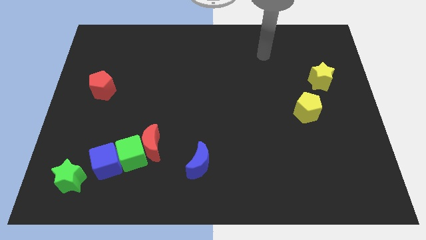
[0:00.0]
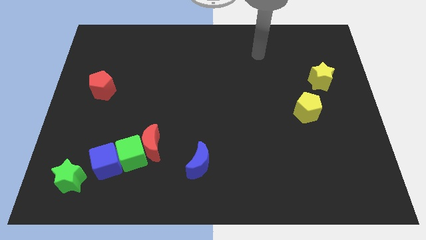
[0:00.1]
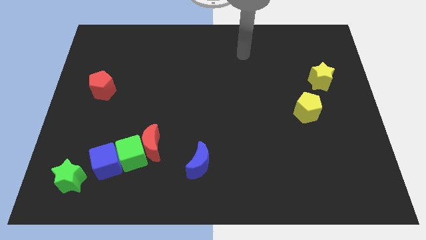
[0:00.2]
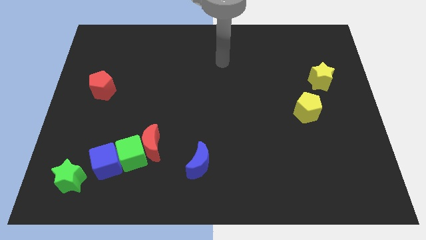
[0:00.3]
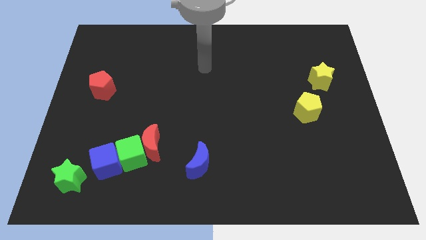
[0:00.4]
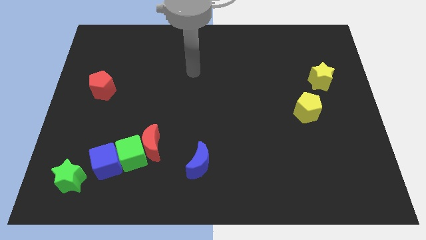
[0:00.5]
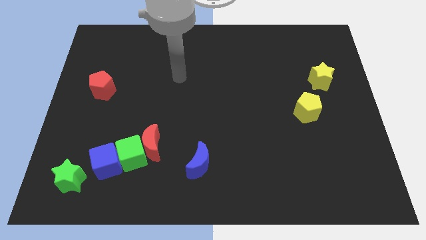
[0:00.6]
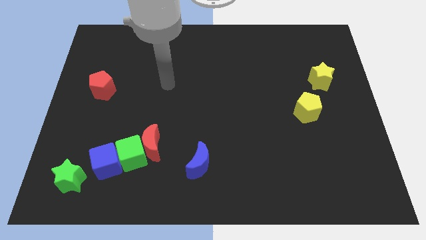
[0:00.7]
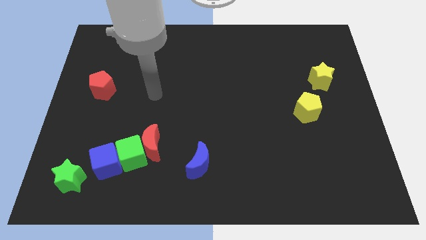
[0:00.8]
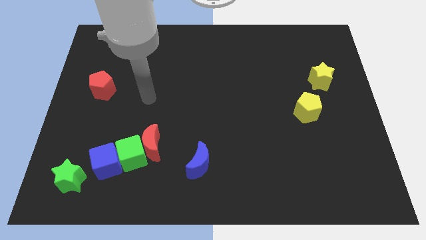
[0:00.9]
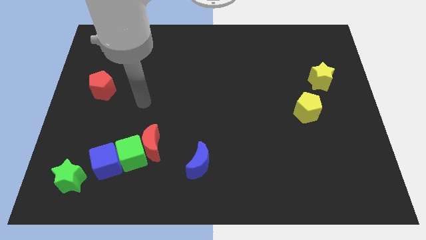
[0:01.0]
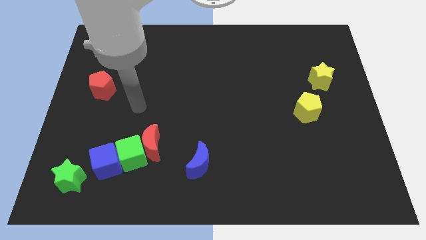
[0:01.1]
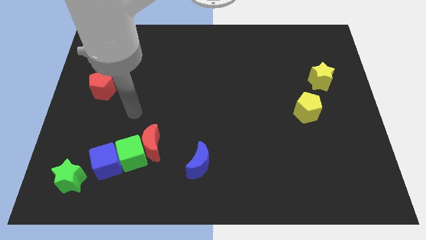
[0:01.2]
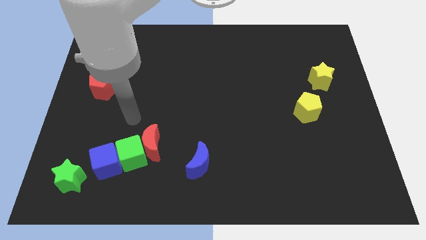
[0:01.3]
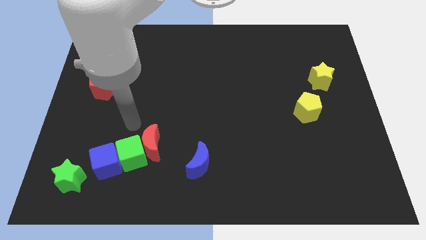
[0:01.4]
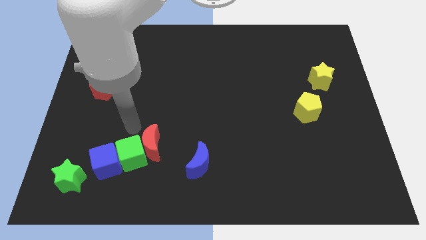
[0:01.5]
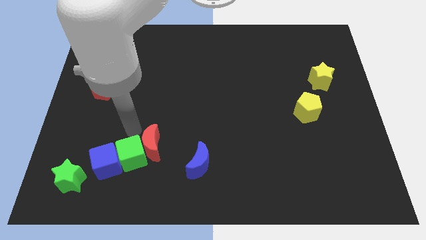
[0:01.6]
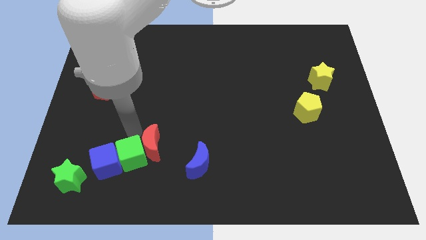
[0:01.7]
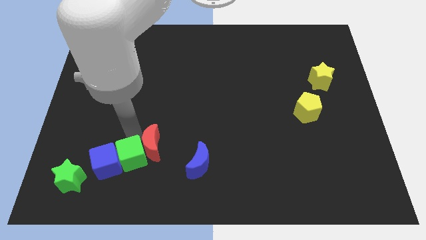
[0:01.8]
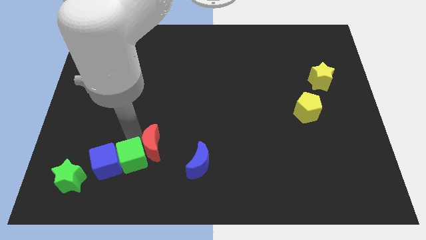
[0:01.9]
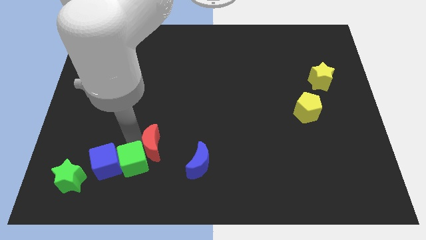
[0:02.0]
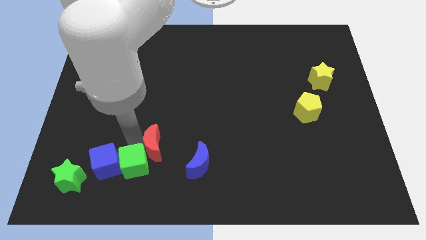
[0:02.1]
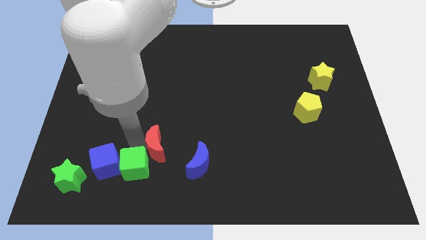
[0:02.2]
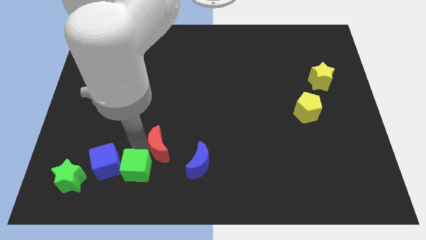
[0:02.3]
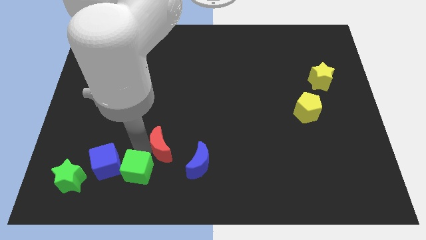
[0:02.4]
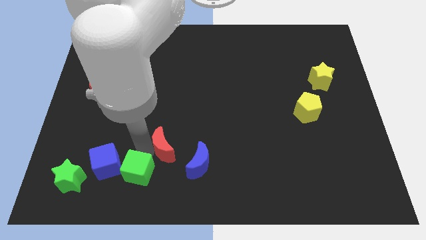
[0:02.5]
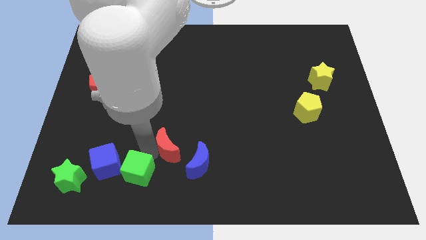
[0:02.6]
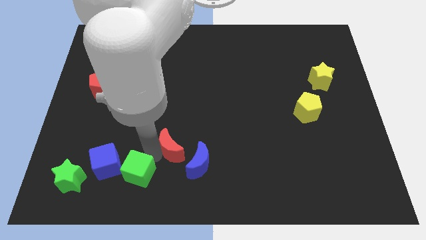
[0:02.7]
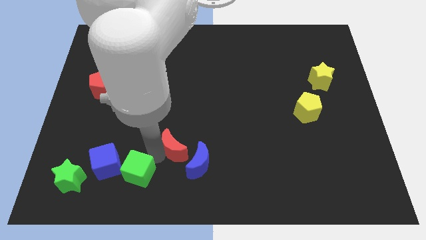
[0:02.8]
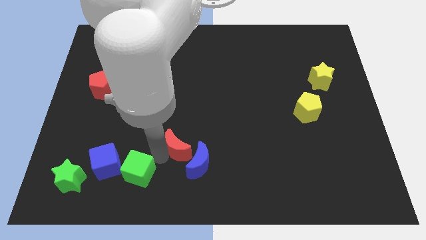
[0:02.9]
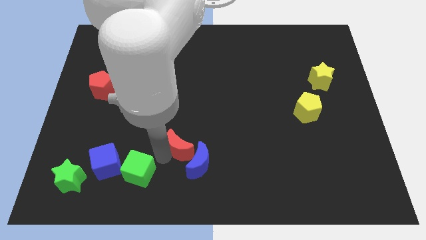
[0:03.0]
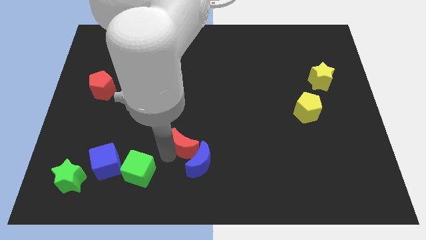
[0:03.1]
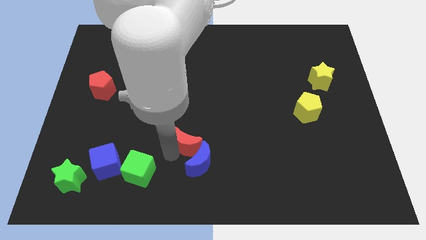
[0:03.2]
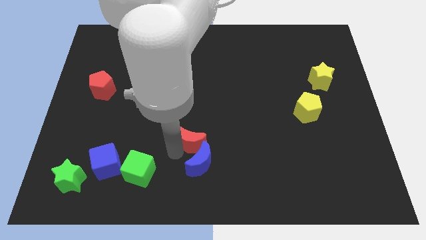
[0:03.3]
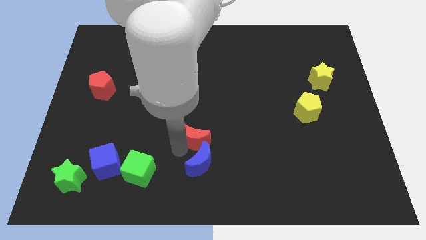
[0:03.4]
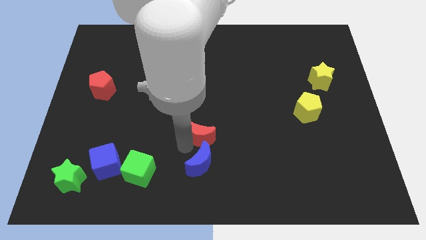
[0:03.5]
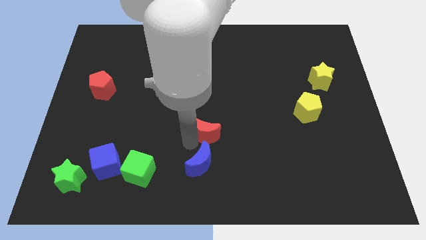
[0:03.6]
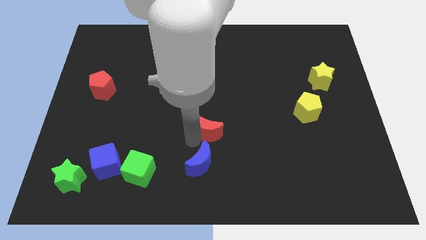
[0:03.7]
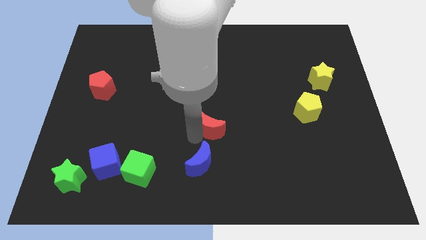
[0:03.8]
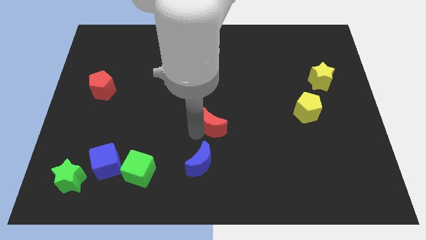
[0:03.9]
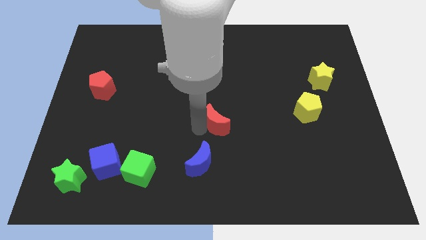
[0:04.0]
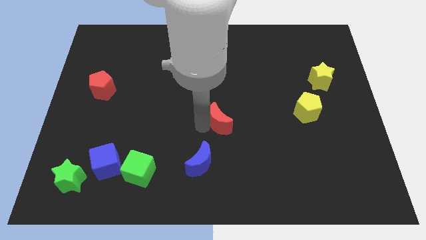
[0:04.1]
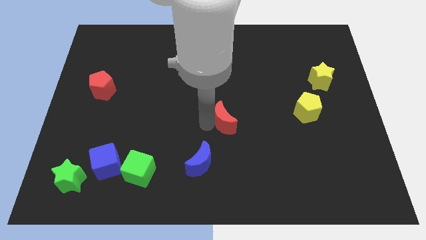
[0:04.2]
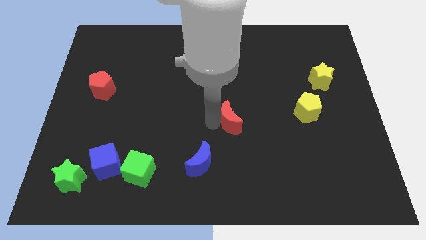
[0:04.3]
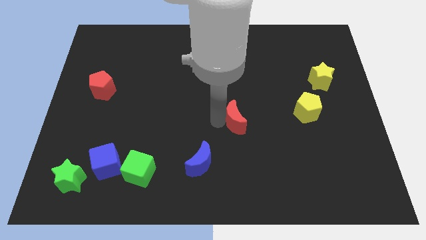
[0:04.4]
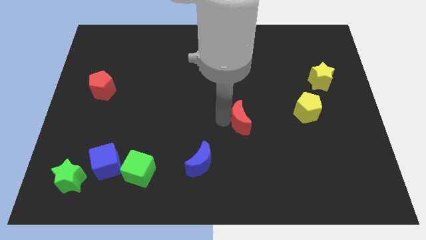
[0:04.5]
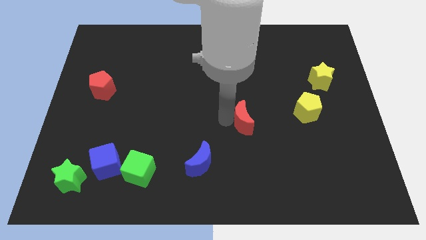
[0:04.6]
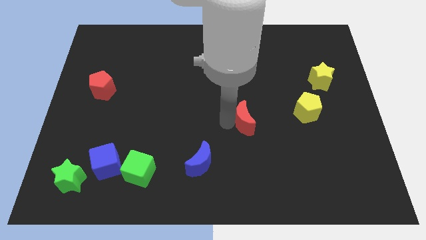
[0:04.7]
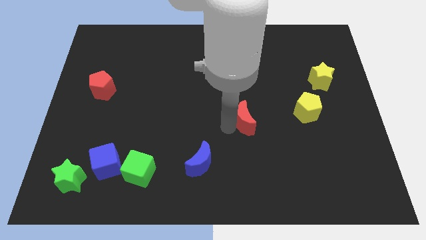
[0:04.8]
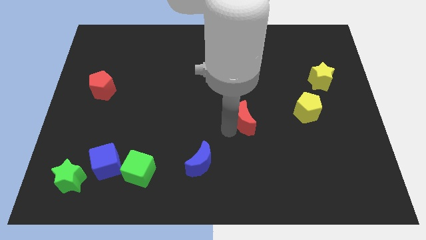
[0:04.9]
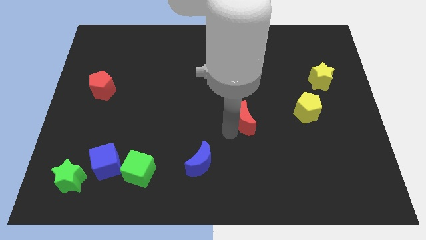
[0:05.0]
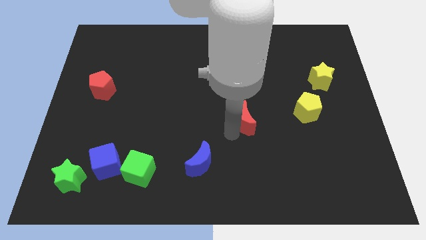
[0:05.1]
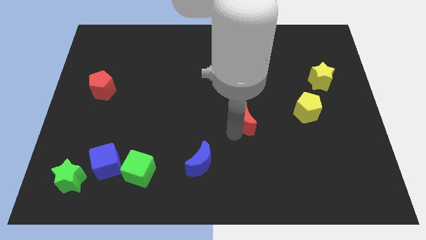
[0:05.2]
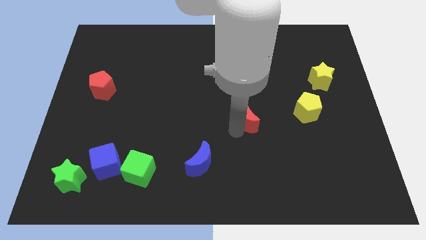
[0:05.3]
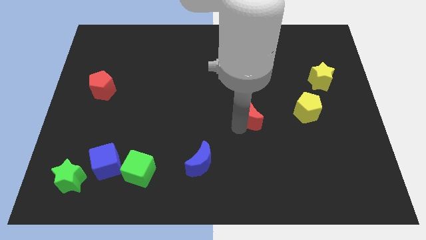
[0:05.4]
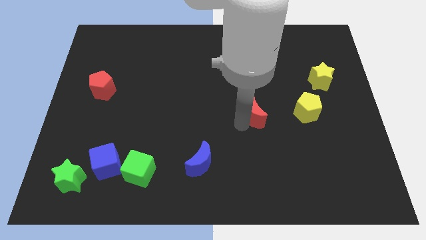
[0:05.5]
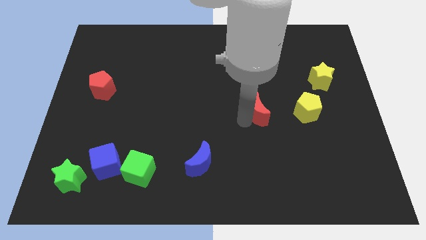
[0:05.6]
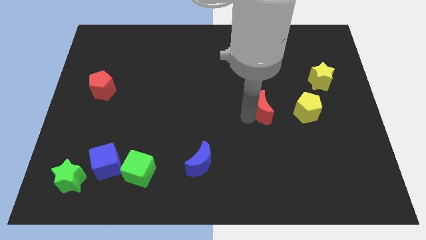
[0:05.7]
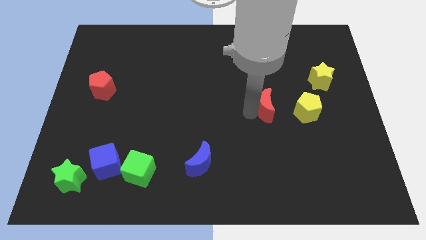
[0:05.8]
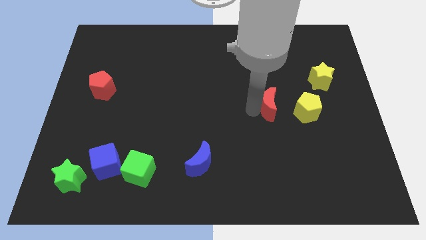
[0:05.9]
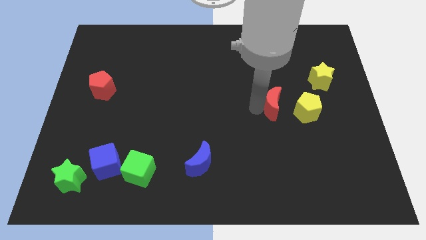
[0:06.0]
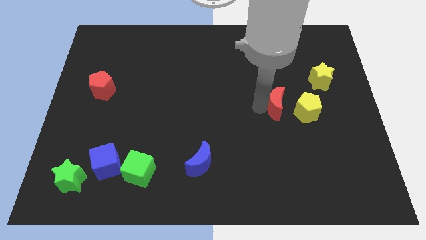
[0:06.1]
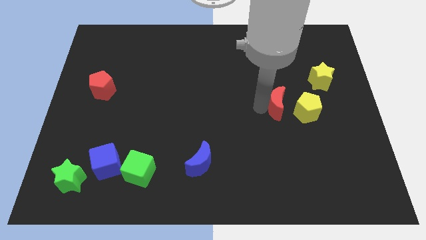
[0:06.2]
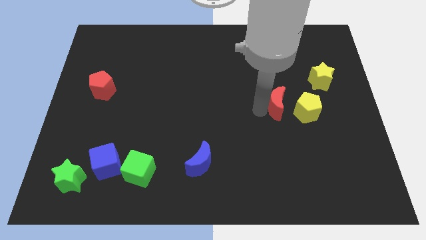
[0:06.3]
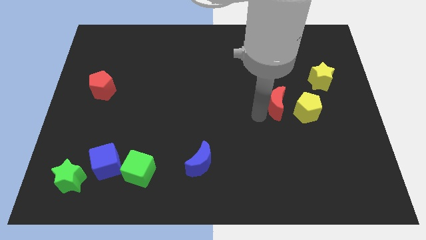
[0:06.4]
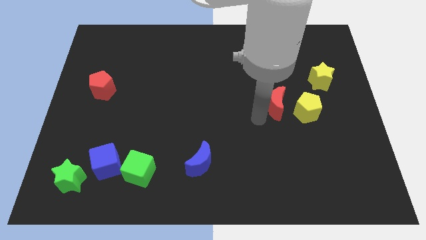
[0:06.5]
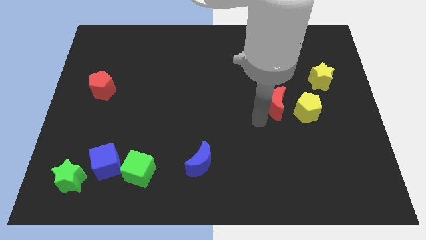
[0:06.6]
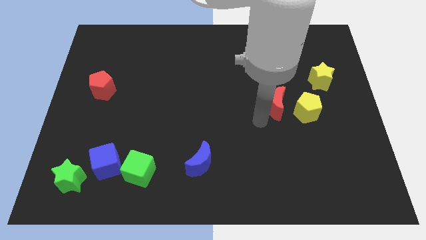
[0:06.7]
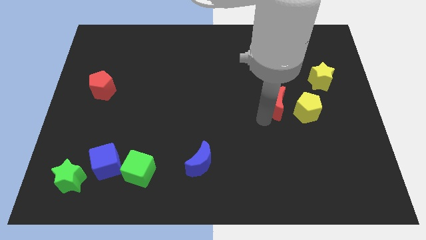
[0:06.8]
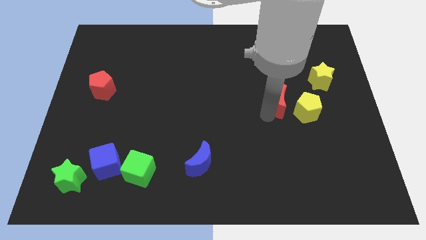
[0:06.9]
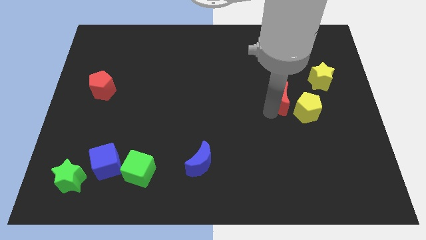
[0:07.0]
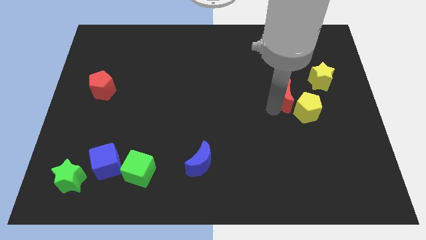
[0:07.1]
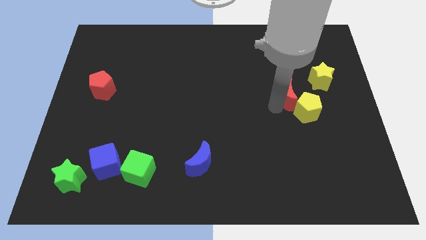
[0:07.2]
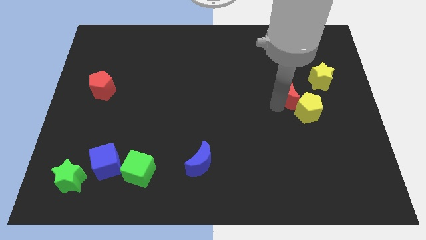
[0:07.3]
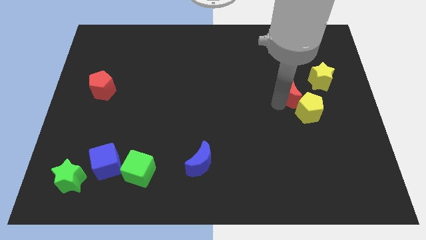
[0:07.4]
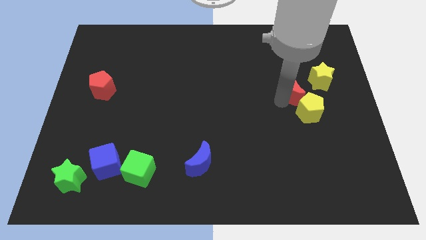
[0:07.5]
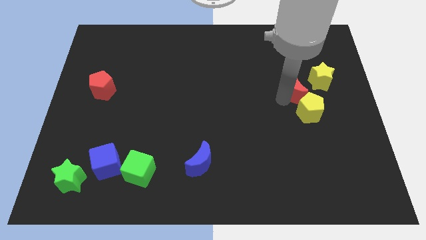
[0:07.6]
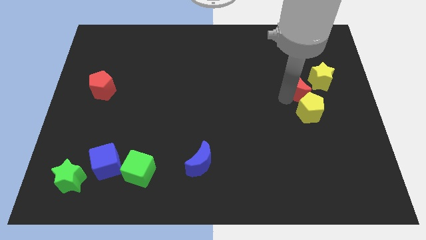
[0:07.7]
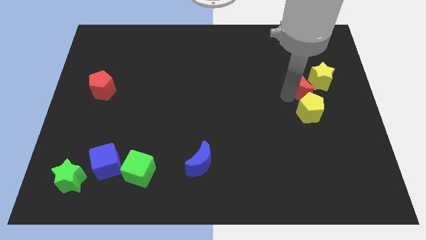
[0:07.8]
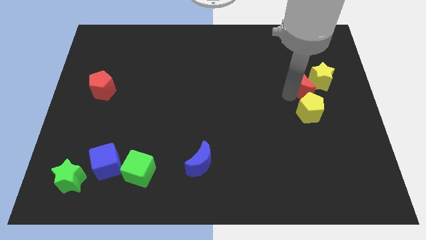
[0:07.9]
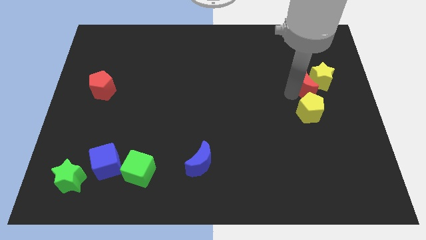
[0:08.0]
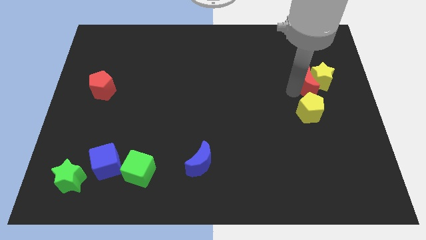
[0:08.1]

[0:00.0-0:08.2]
put the red moon next to the yellow star

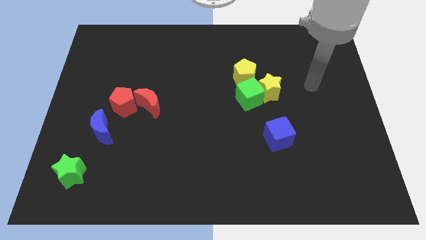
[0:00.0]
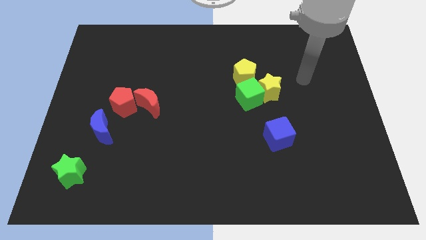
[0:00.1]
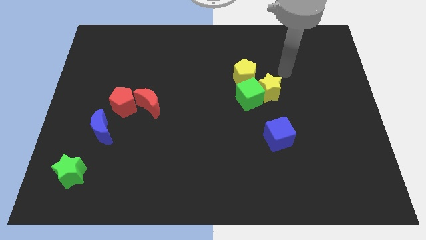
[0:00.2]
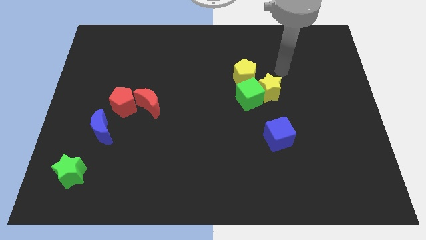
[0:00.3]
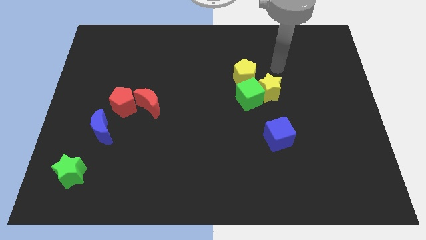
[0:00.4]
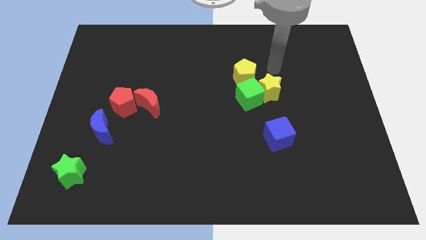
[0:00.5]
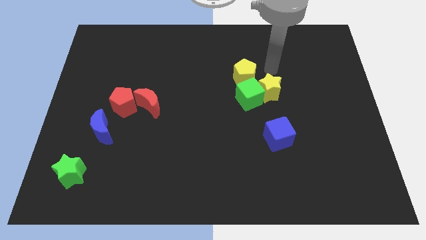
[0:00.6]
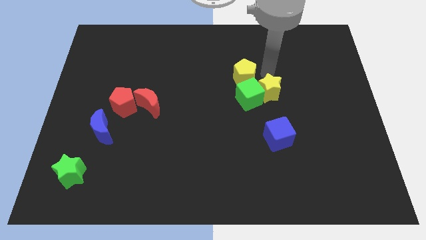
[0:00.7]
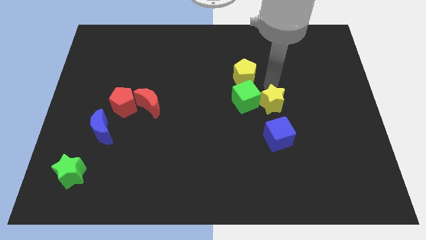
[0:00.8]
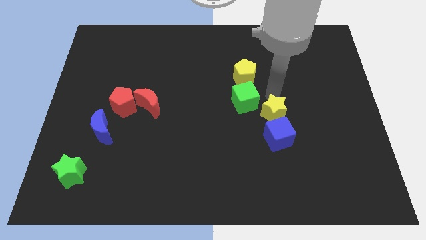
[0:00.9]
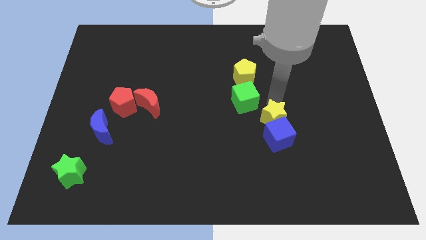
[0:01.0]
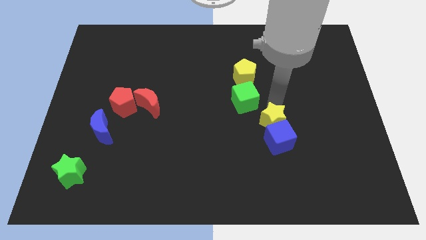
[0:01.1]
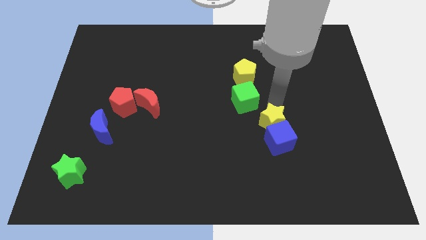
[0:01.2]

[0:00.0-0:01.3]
move the yellow star close to the blue cube
